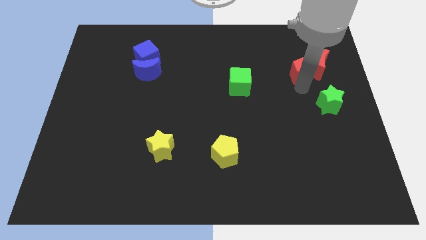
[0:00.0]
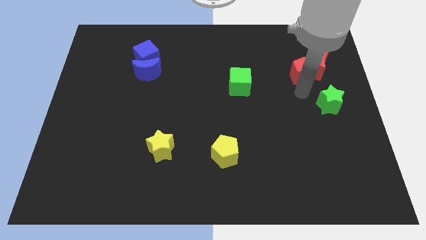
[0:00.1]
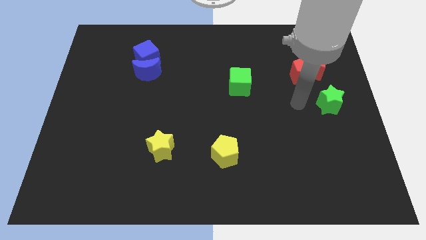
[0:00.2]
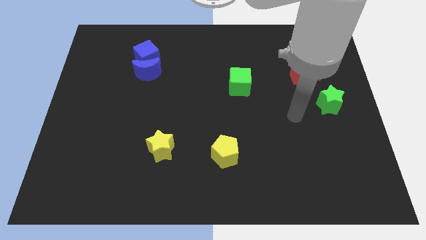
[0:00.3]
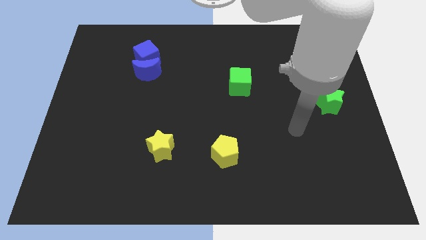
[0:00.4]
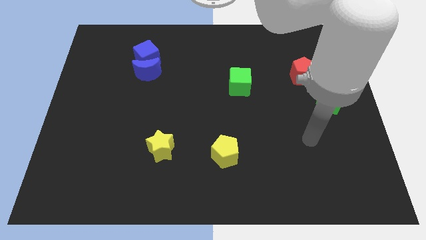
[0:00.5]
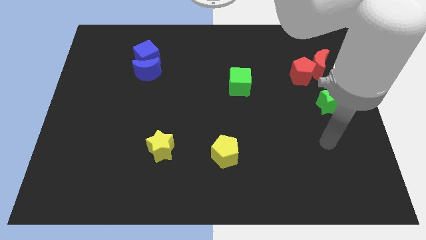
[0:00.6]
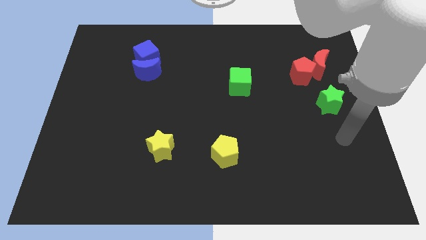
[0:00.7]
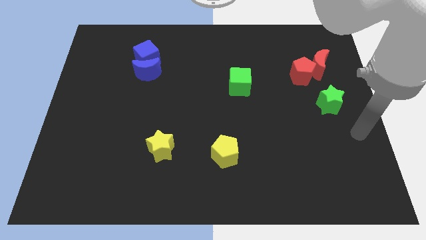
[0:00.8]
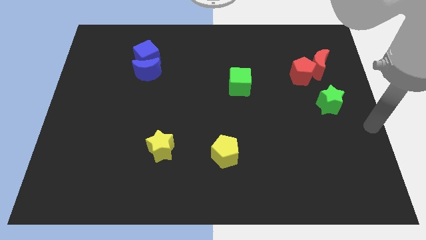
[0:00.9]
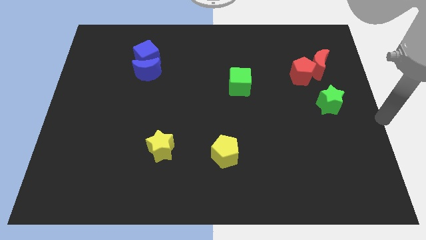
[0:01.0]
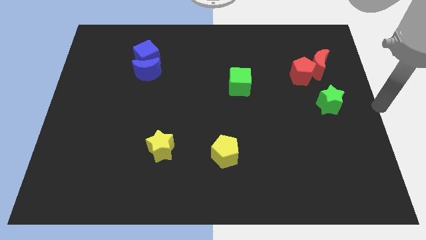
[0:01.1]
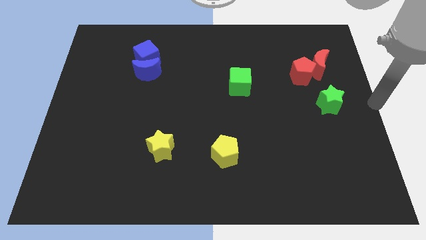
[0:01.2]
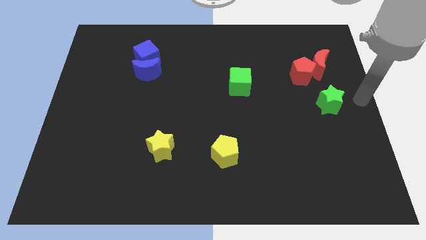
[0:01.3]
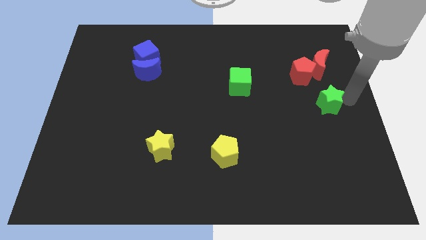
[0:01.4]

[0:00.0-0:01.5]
place the arm to the right of the green star

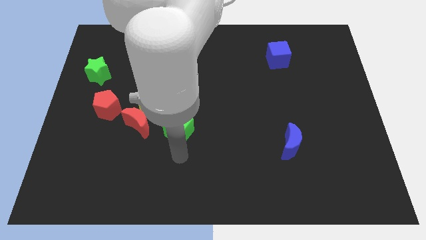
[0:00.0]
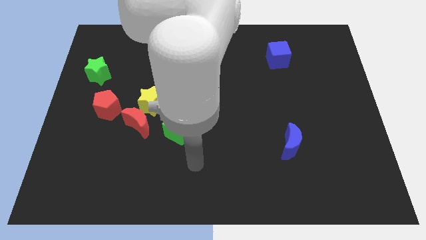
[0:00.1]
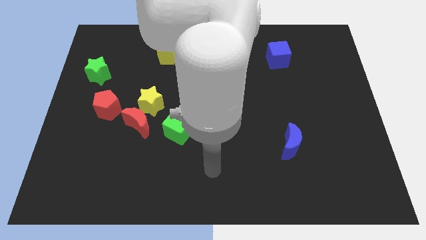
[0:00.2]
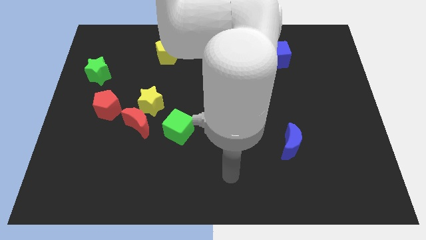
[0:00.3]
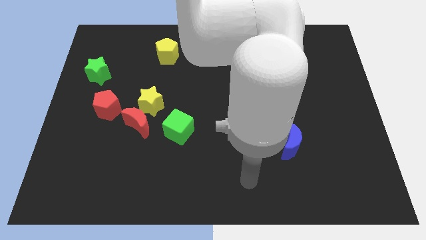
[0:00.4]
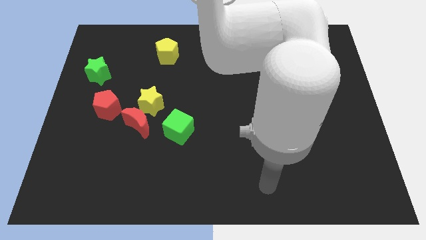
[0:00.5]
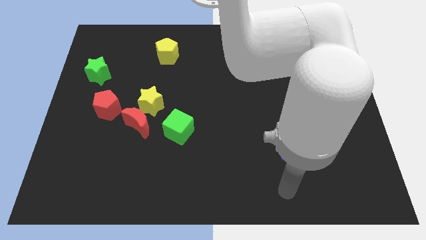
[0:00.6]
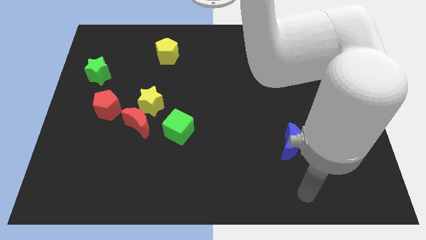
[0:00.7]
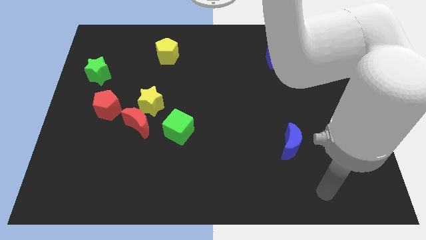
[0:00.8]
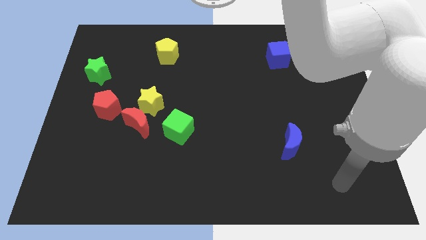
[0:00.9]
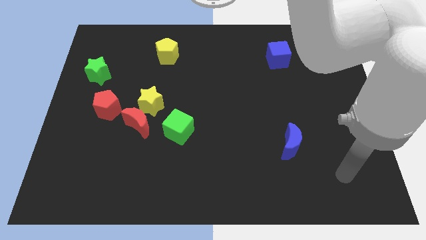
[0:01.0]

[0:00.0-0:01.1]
move your arm away from green cube

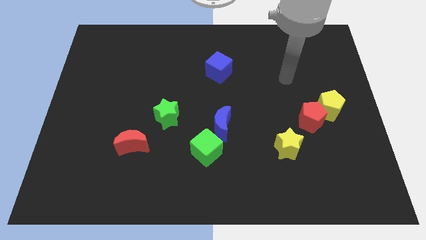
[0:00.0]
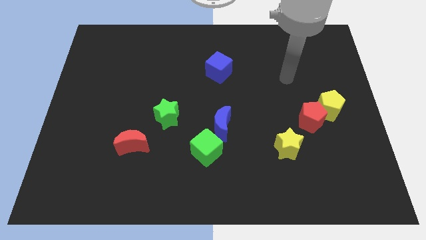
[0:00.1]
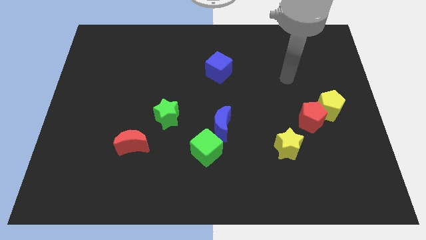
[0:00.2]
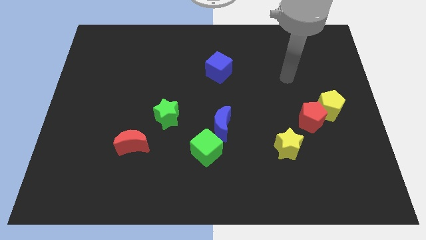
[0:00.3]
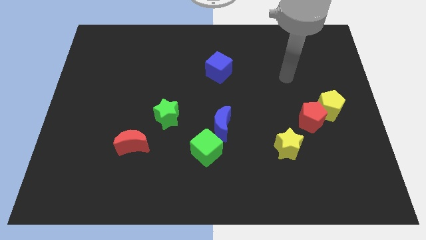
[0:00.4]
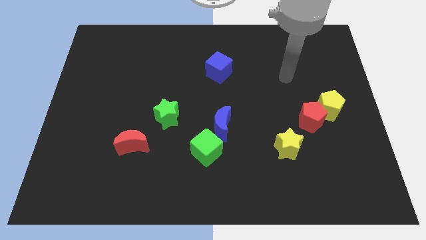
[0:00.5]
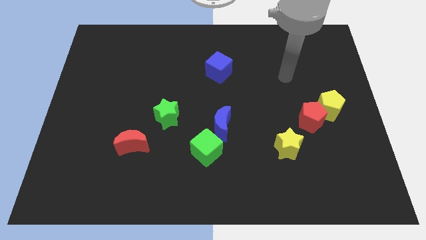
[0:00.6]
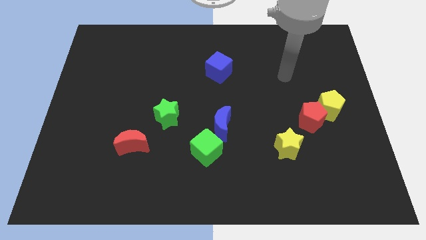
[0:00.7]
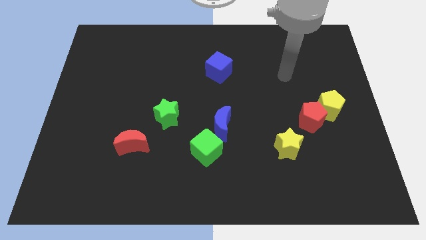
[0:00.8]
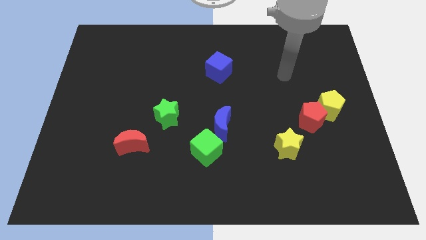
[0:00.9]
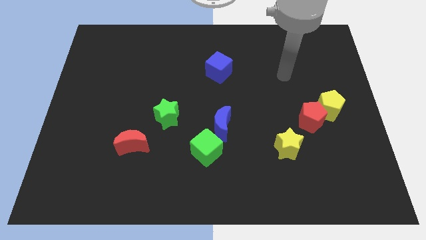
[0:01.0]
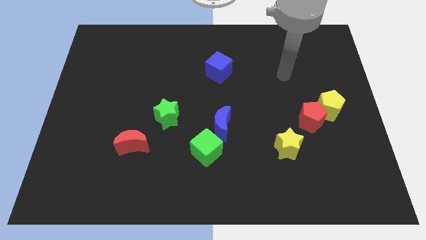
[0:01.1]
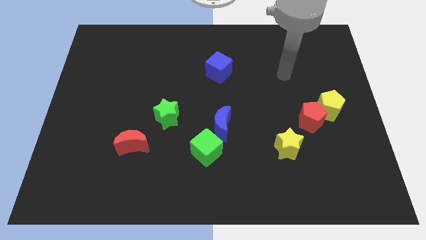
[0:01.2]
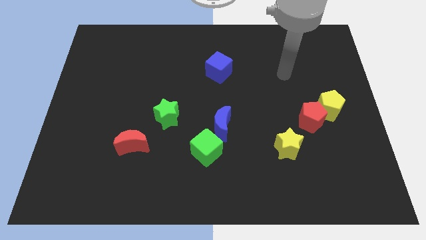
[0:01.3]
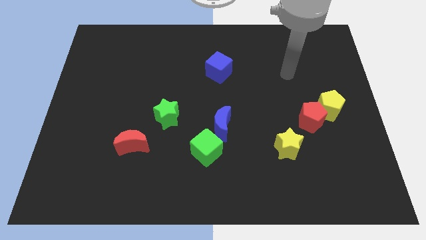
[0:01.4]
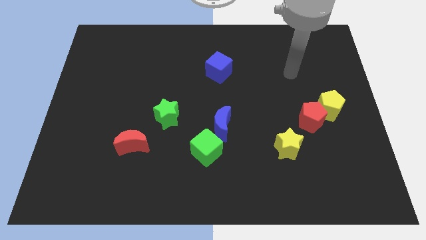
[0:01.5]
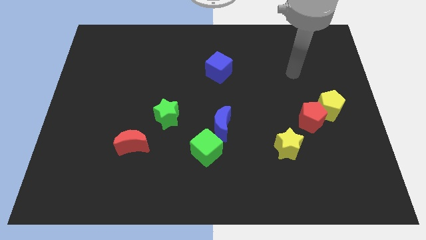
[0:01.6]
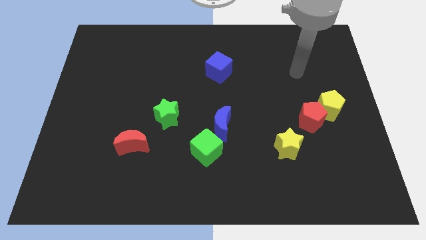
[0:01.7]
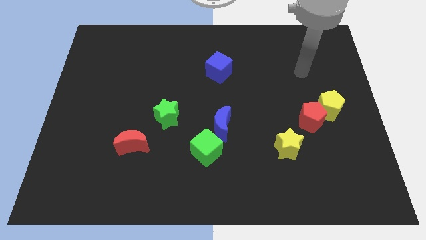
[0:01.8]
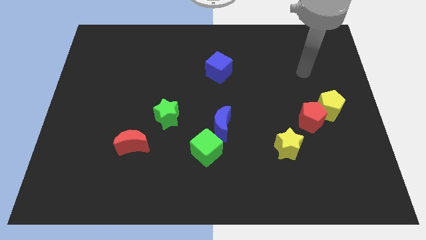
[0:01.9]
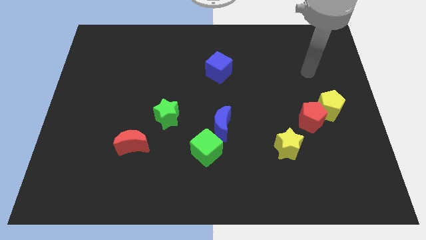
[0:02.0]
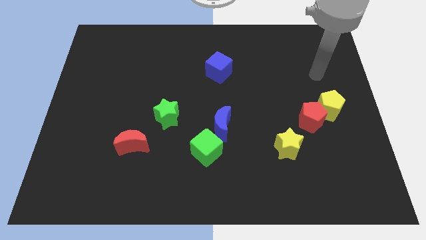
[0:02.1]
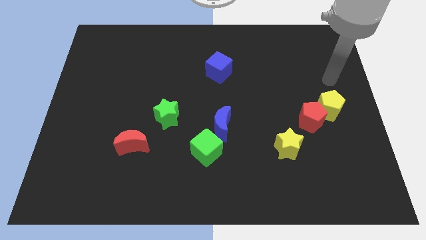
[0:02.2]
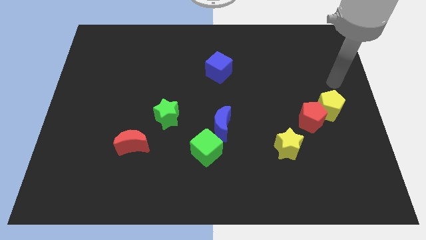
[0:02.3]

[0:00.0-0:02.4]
place your arm to the top of yellow pentagon

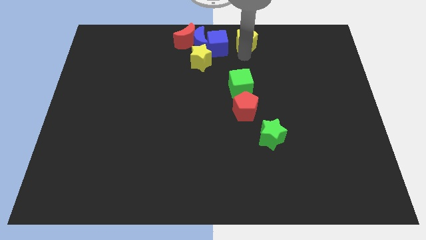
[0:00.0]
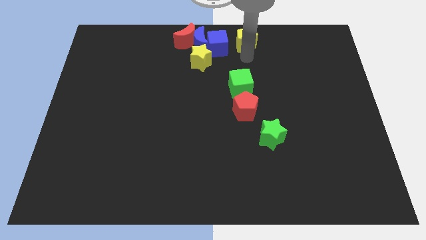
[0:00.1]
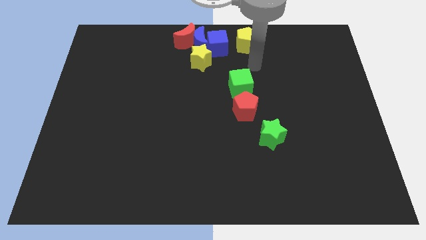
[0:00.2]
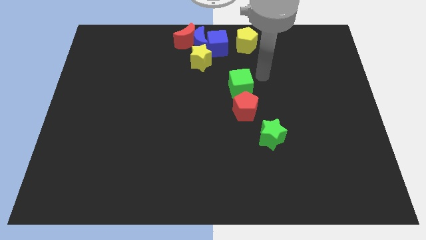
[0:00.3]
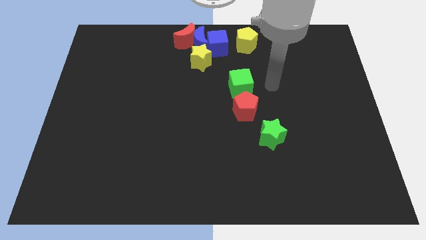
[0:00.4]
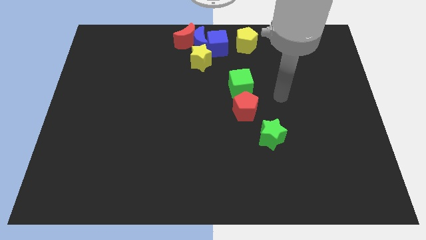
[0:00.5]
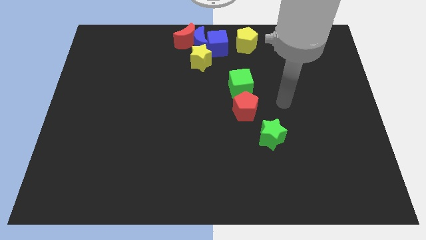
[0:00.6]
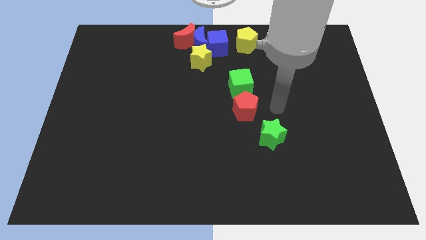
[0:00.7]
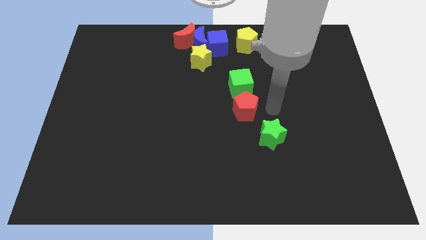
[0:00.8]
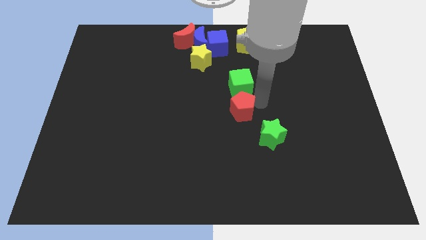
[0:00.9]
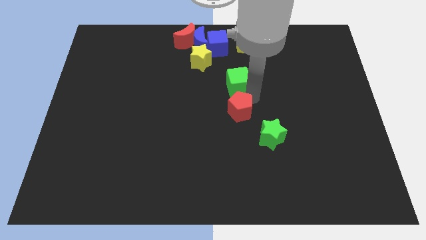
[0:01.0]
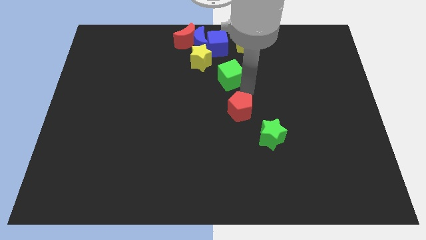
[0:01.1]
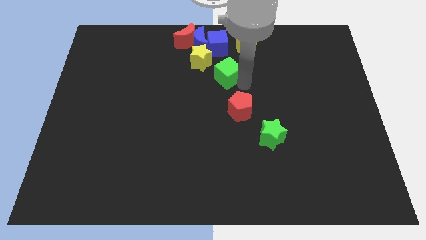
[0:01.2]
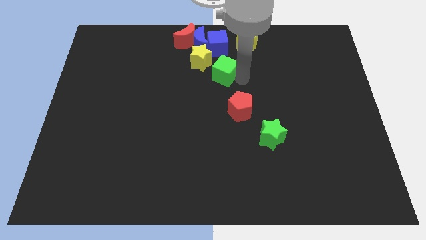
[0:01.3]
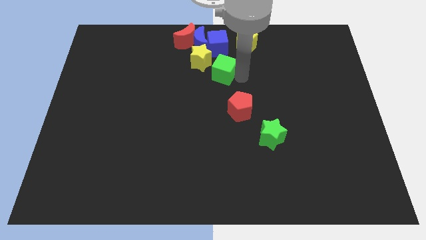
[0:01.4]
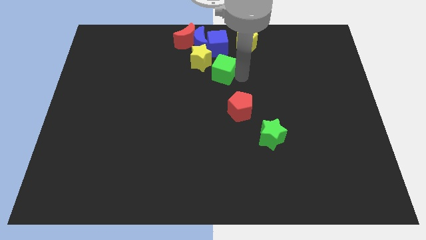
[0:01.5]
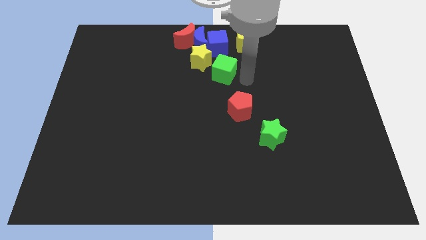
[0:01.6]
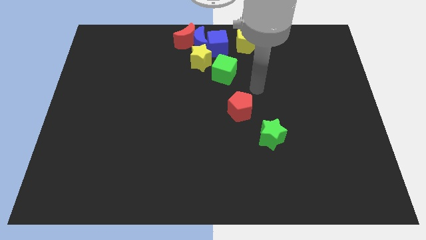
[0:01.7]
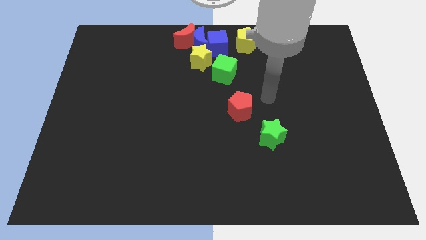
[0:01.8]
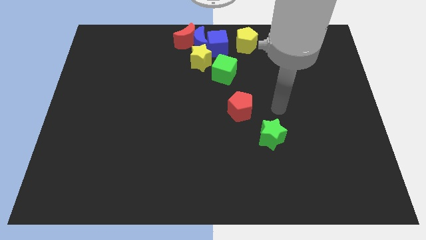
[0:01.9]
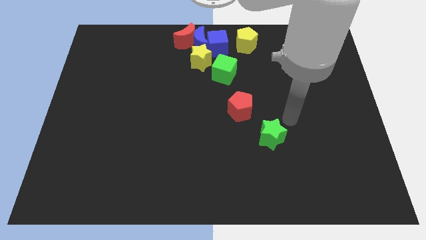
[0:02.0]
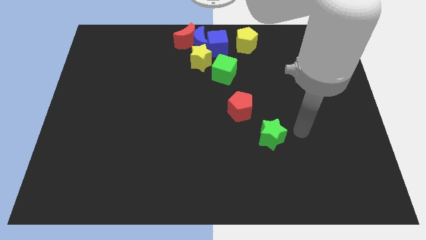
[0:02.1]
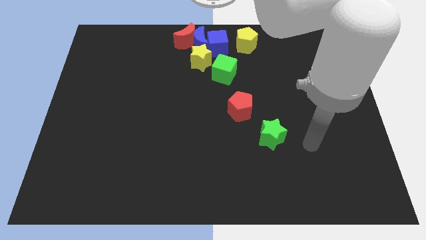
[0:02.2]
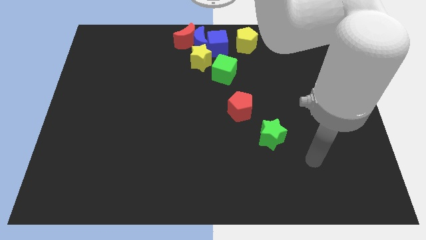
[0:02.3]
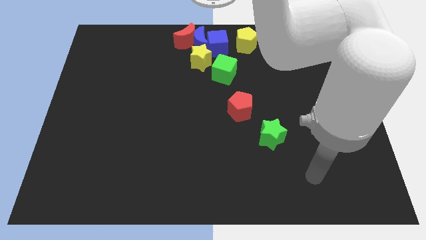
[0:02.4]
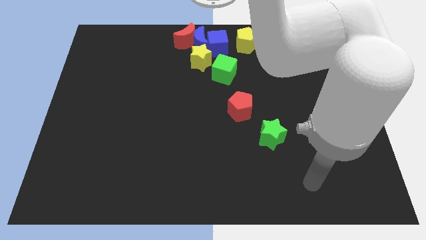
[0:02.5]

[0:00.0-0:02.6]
slide up yellow pentagon and green cube upward

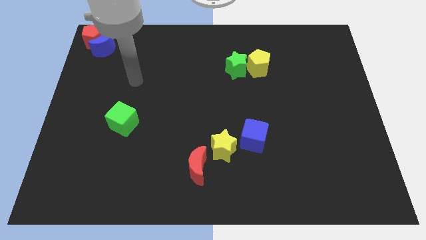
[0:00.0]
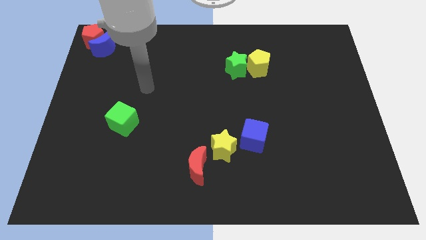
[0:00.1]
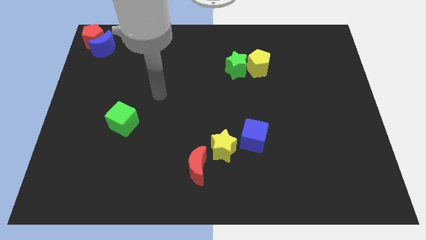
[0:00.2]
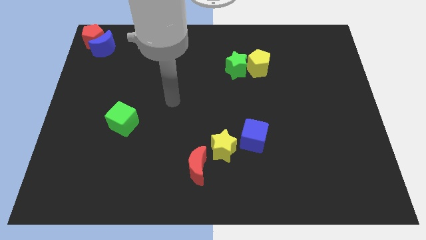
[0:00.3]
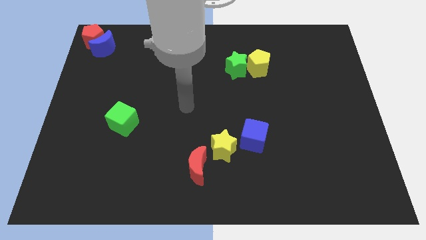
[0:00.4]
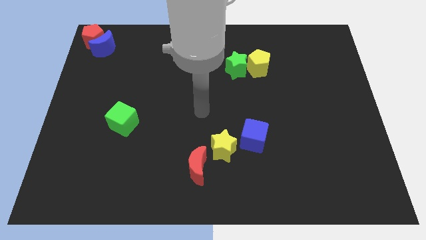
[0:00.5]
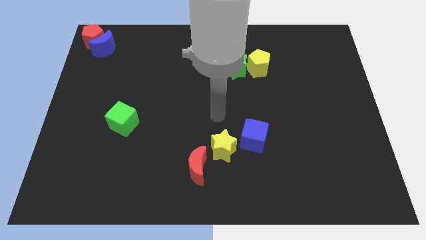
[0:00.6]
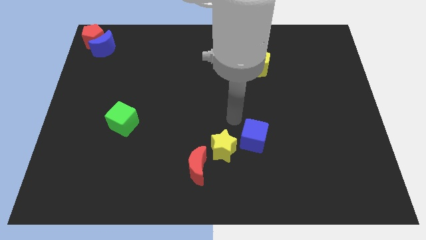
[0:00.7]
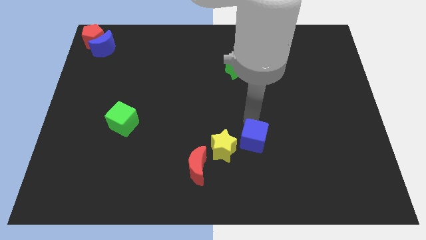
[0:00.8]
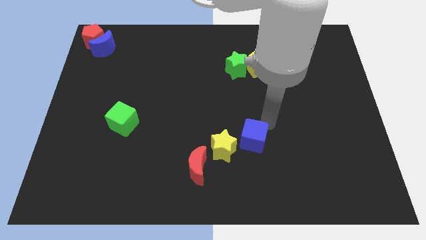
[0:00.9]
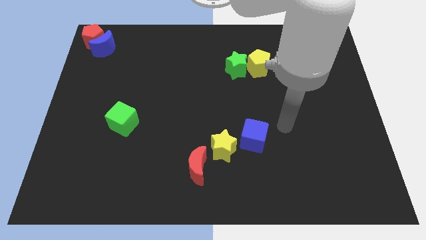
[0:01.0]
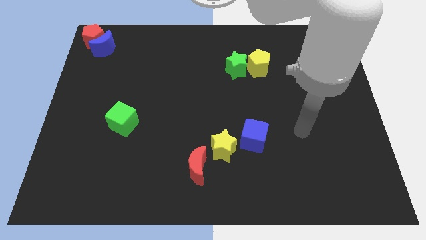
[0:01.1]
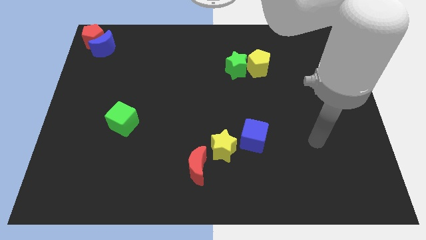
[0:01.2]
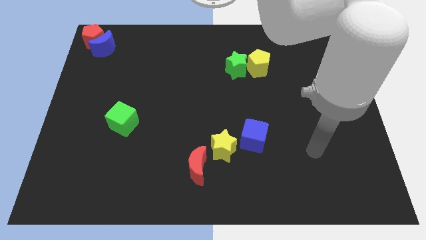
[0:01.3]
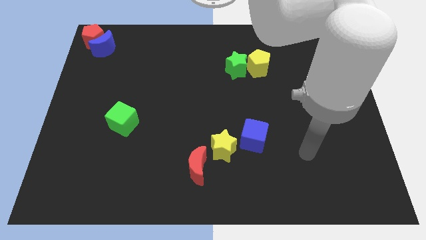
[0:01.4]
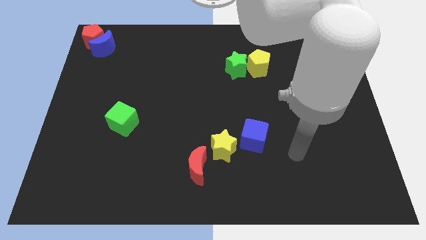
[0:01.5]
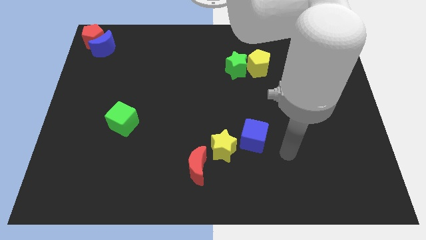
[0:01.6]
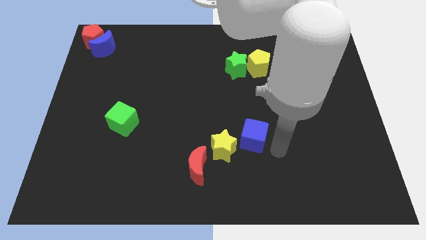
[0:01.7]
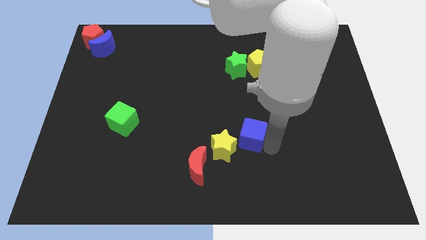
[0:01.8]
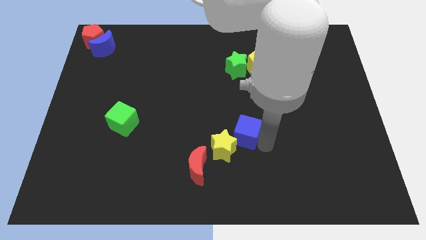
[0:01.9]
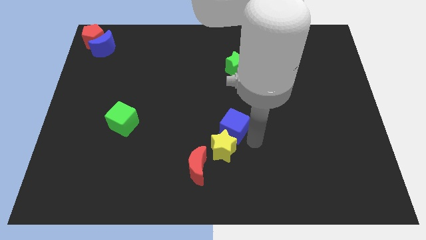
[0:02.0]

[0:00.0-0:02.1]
push the blue cube above the yellow star
